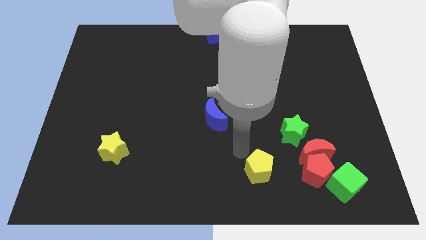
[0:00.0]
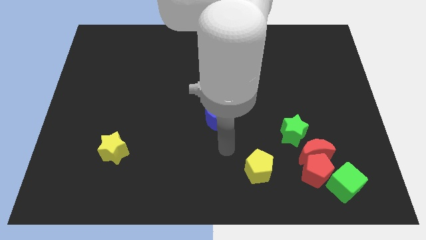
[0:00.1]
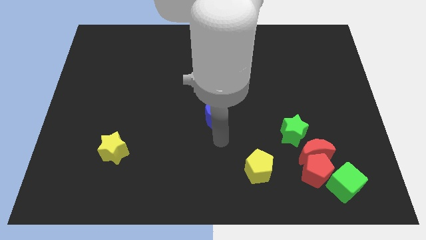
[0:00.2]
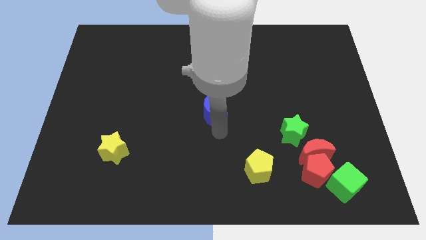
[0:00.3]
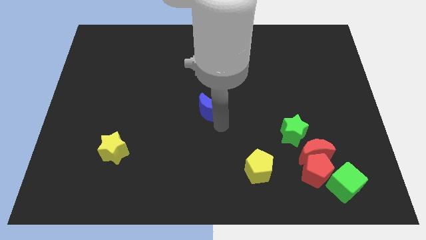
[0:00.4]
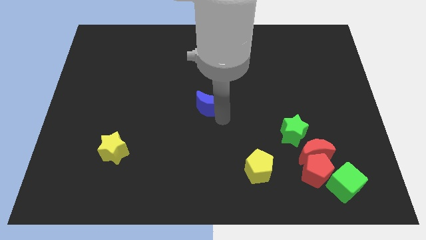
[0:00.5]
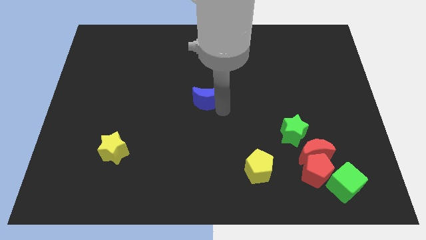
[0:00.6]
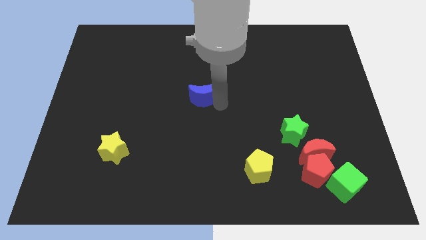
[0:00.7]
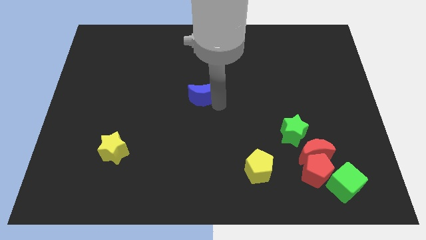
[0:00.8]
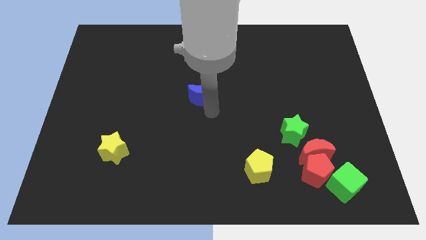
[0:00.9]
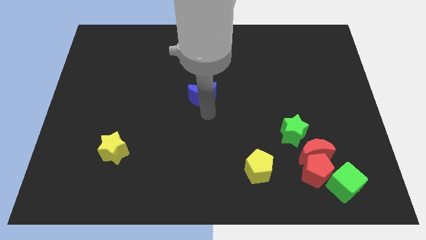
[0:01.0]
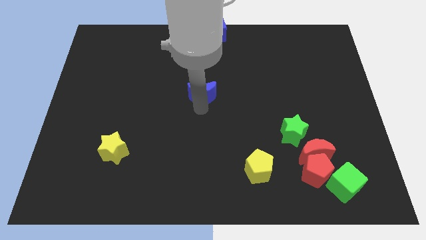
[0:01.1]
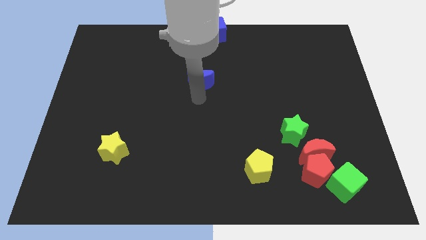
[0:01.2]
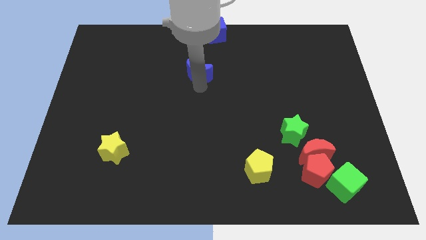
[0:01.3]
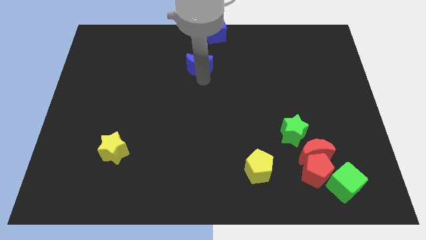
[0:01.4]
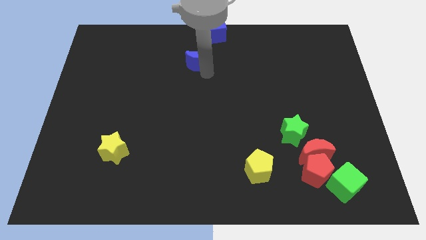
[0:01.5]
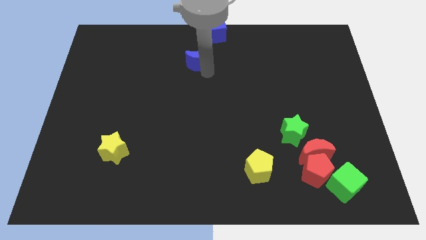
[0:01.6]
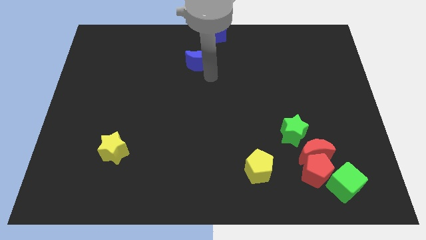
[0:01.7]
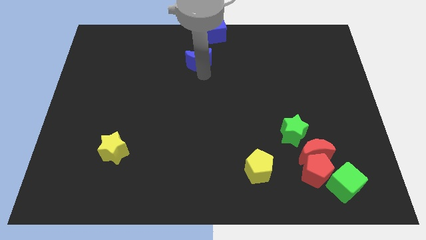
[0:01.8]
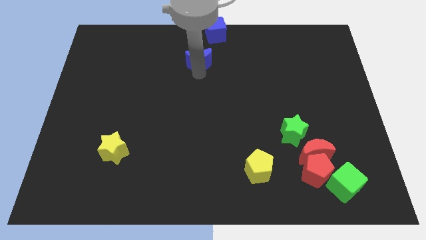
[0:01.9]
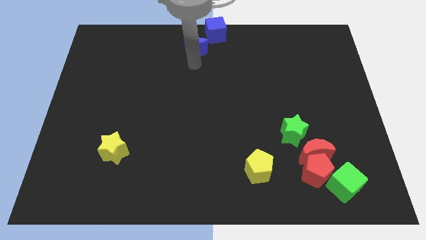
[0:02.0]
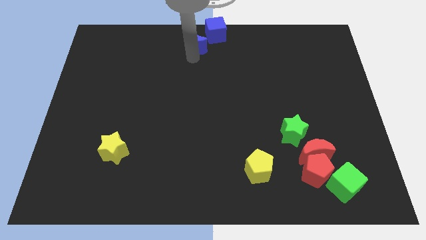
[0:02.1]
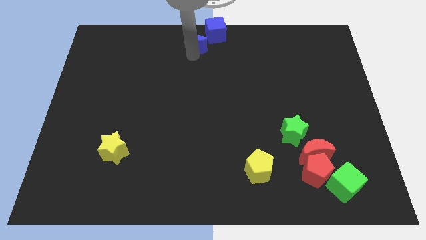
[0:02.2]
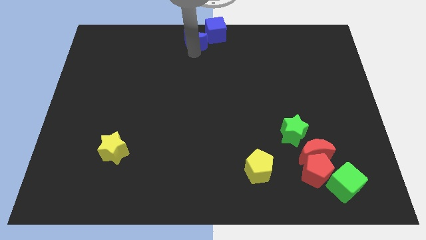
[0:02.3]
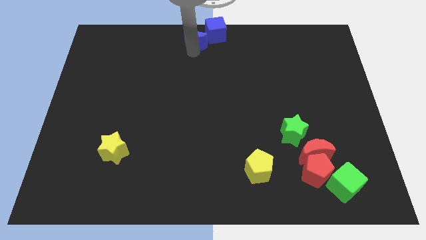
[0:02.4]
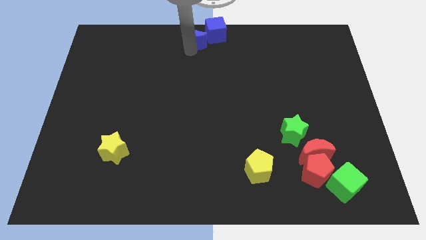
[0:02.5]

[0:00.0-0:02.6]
push the blue crescent close to the blue cube

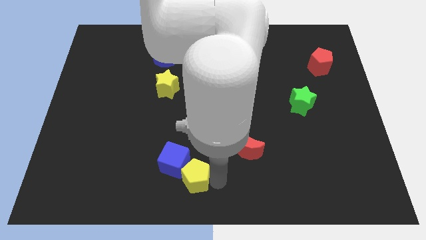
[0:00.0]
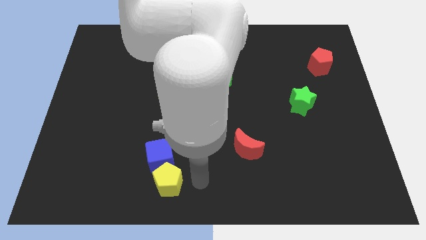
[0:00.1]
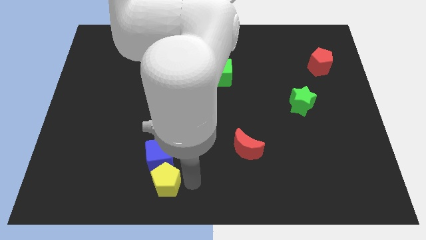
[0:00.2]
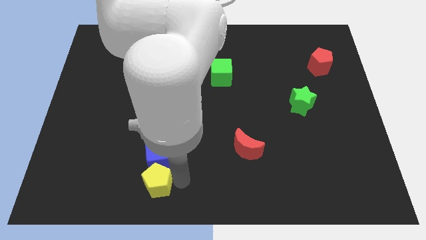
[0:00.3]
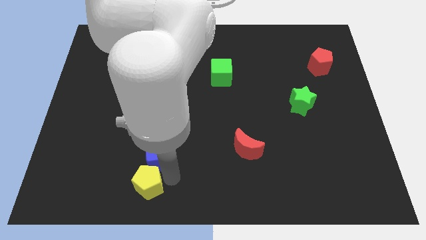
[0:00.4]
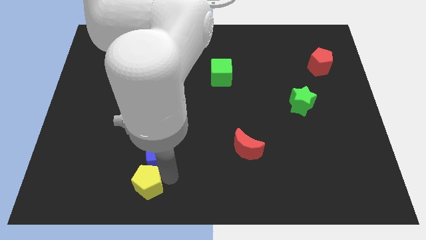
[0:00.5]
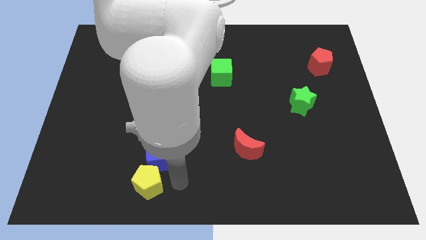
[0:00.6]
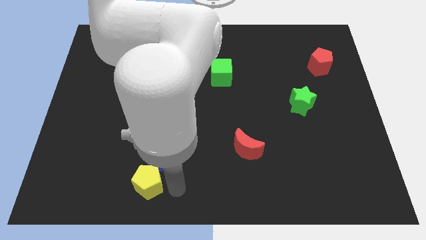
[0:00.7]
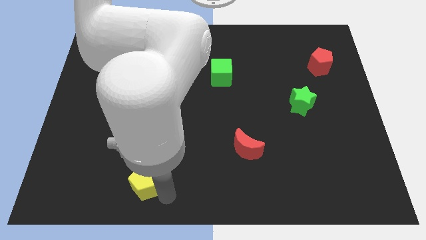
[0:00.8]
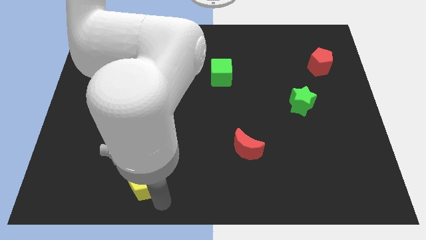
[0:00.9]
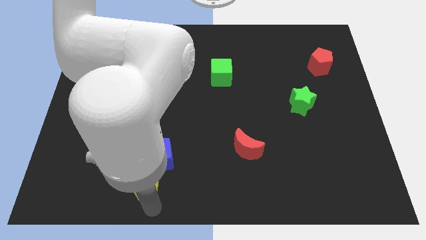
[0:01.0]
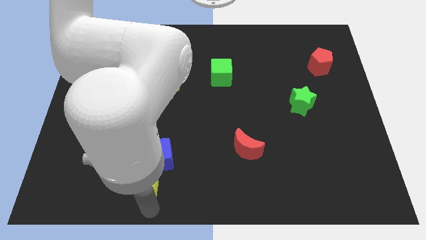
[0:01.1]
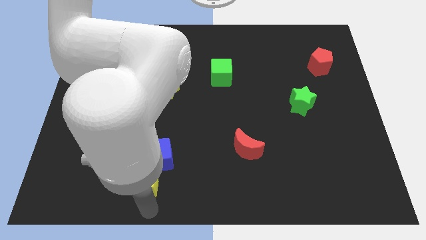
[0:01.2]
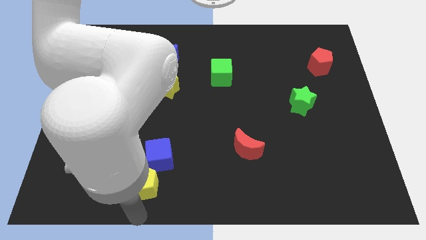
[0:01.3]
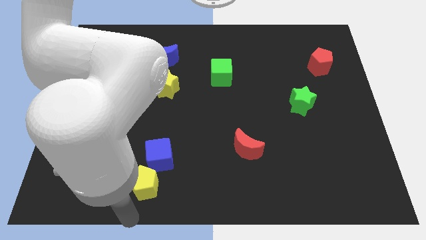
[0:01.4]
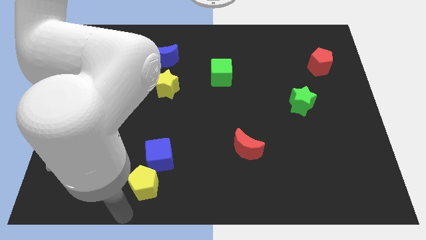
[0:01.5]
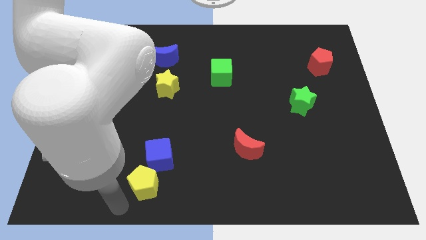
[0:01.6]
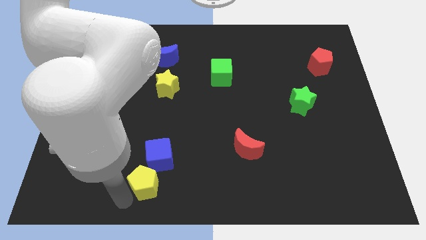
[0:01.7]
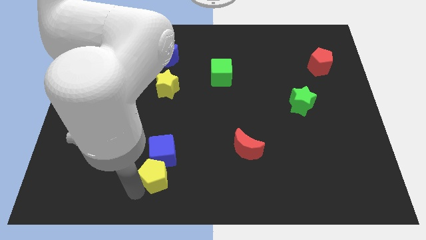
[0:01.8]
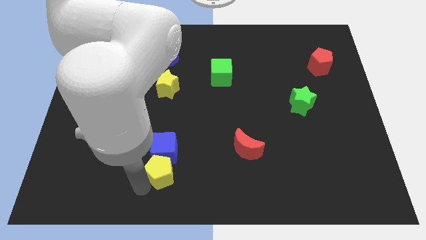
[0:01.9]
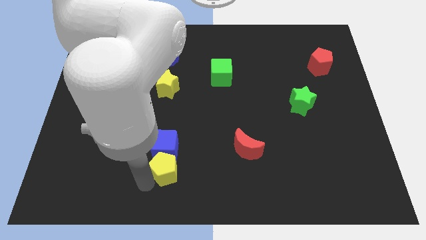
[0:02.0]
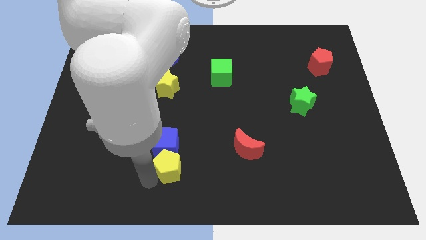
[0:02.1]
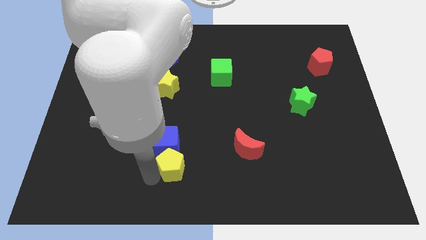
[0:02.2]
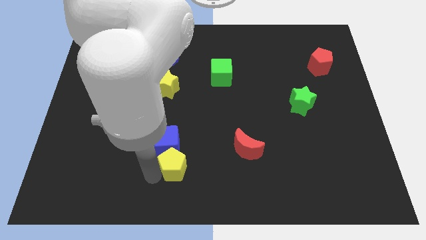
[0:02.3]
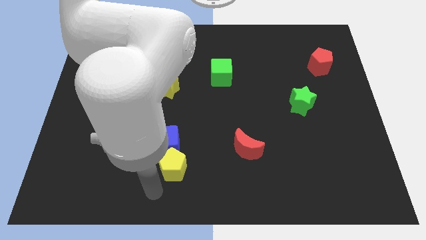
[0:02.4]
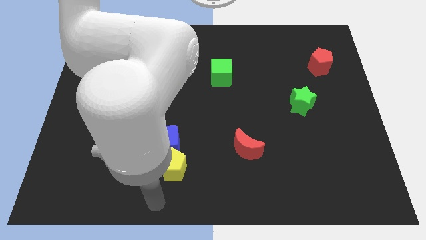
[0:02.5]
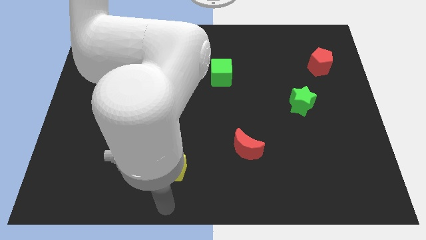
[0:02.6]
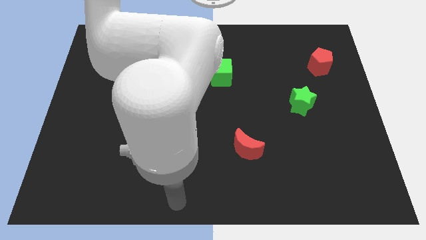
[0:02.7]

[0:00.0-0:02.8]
push yellow pentagon slightly upwards

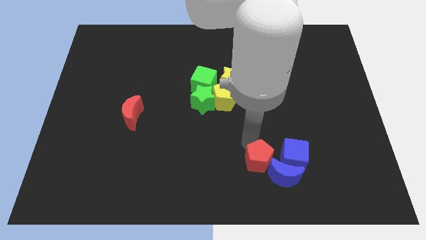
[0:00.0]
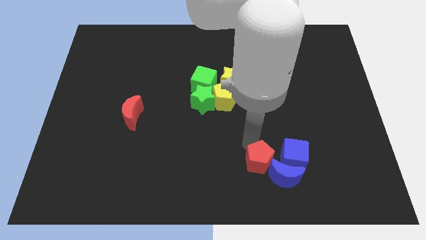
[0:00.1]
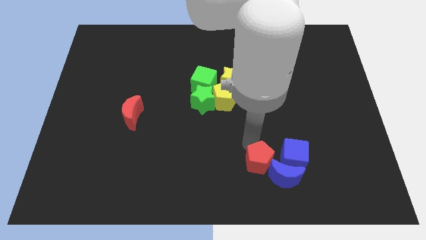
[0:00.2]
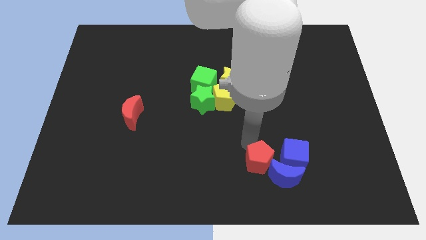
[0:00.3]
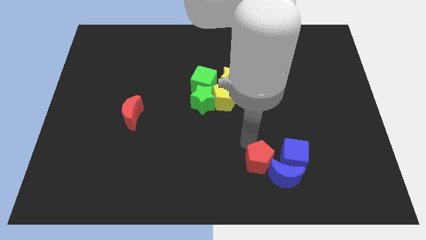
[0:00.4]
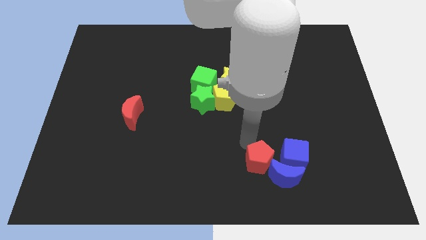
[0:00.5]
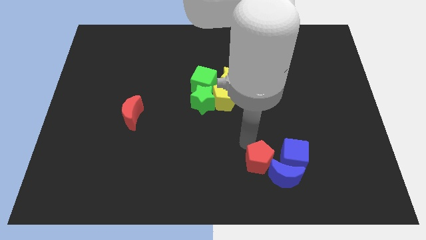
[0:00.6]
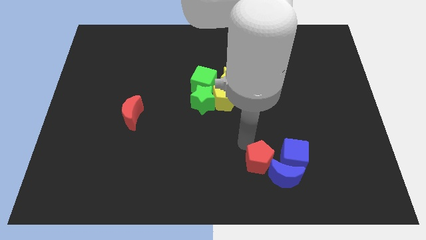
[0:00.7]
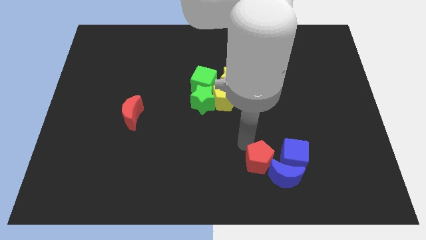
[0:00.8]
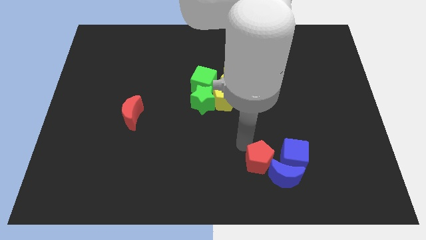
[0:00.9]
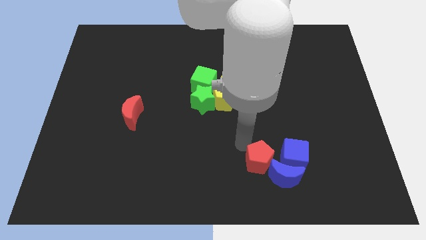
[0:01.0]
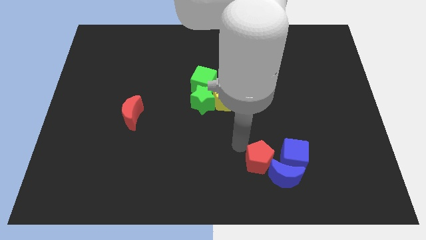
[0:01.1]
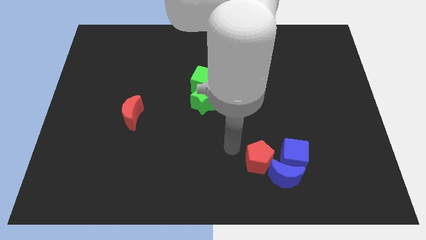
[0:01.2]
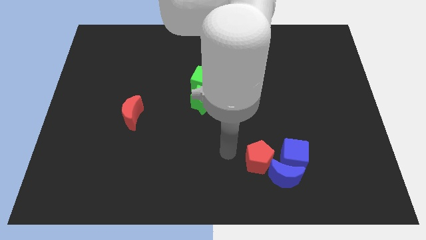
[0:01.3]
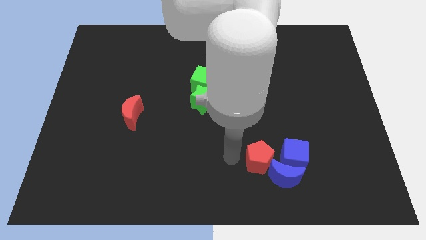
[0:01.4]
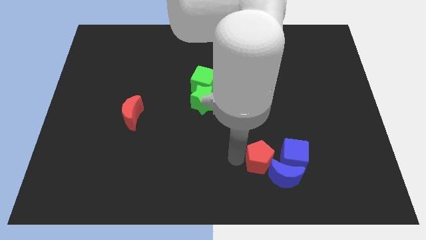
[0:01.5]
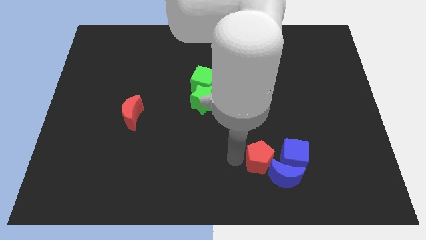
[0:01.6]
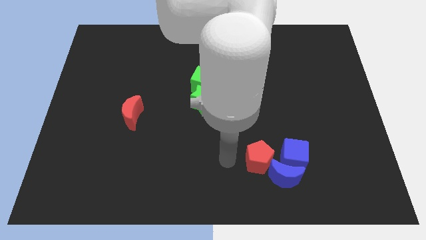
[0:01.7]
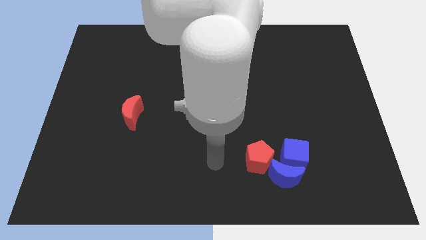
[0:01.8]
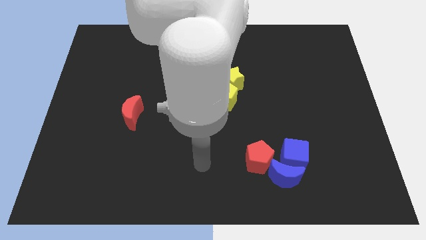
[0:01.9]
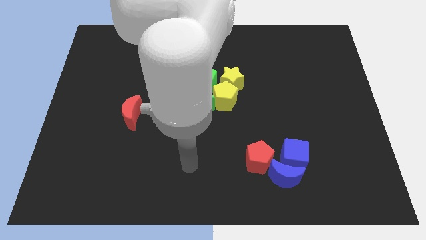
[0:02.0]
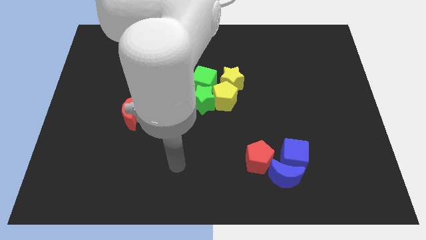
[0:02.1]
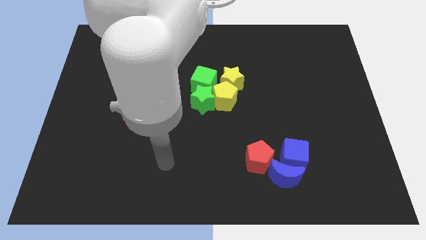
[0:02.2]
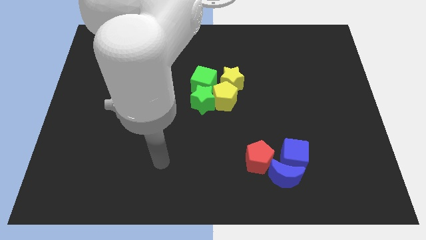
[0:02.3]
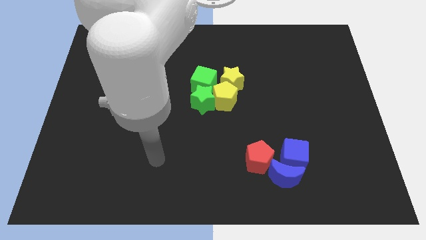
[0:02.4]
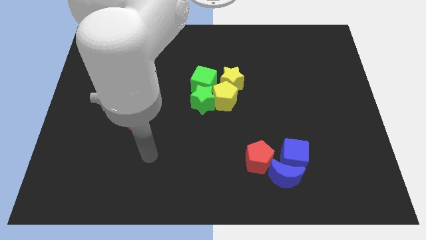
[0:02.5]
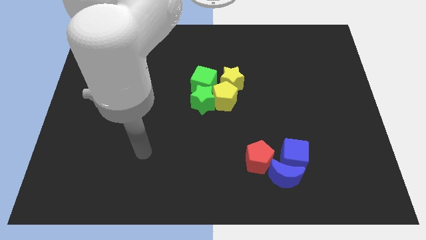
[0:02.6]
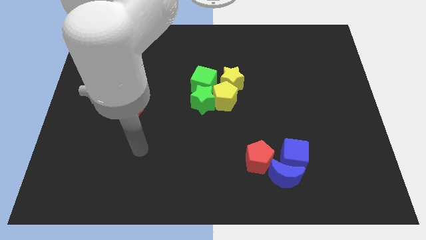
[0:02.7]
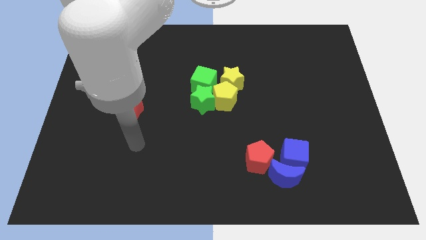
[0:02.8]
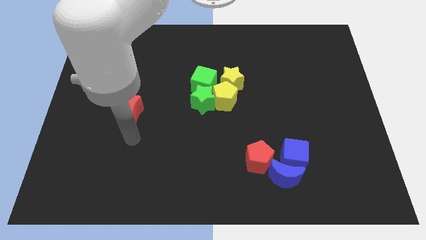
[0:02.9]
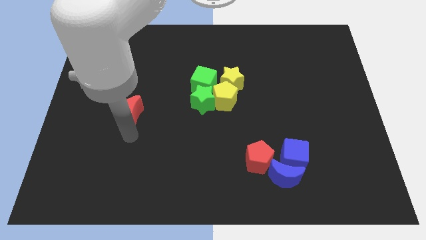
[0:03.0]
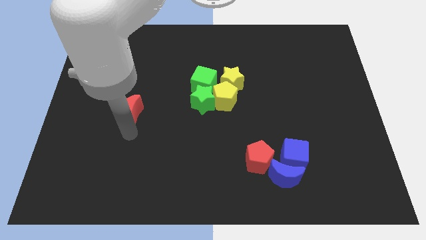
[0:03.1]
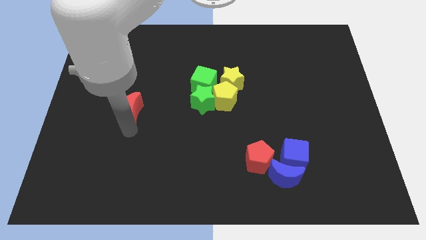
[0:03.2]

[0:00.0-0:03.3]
push your hand at the bottom of the red moon

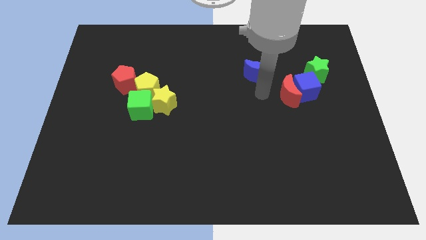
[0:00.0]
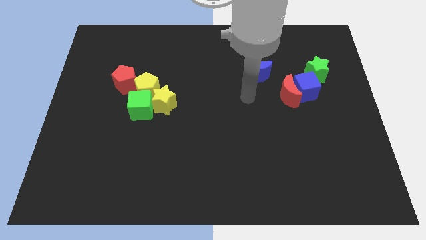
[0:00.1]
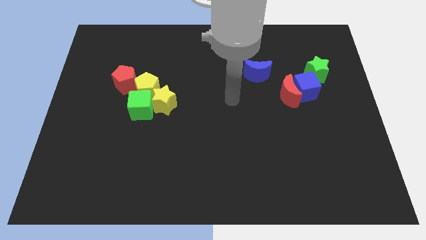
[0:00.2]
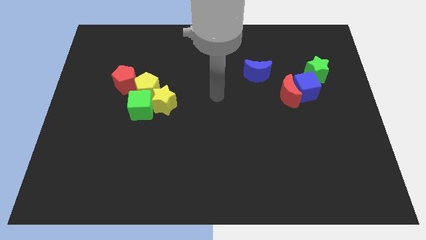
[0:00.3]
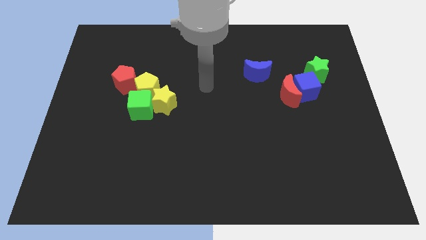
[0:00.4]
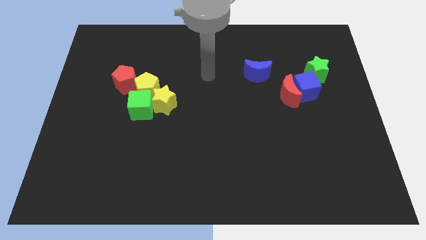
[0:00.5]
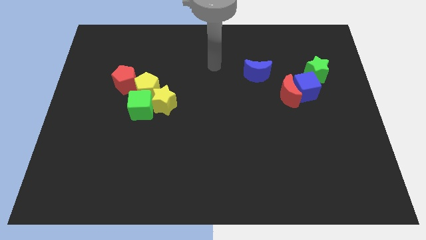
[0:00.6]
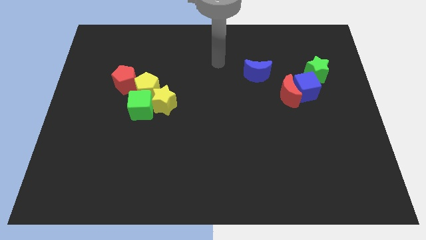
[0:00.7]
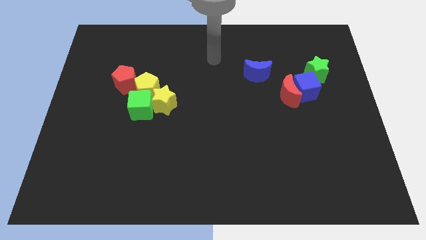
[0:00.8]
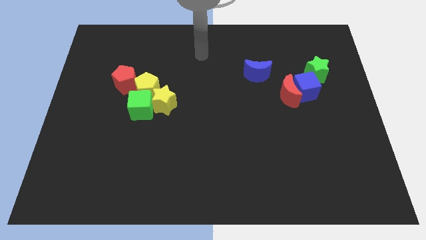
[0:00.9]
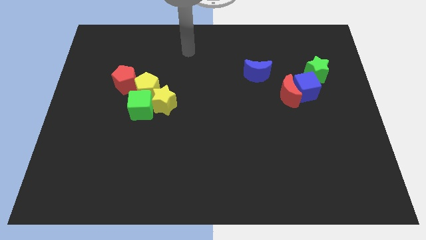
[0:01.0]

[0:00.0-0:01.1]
move your arm away from the red moon
